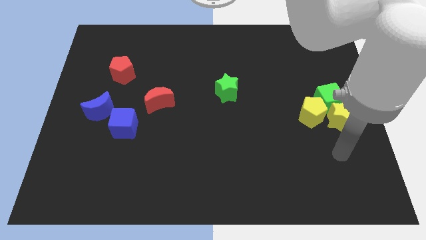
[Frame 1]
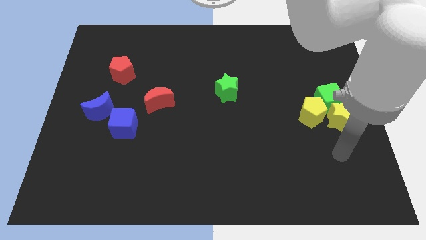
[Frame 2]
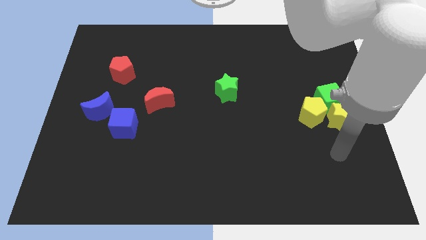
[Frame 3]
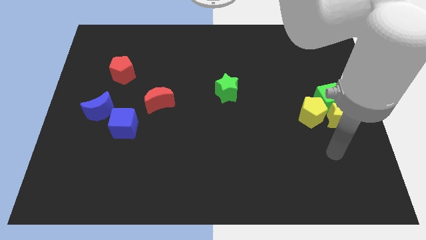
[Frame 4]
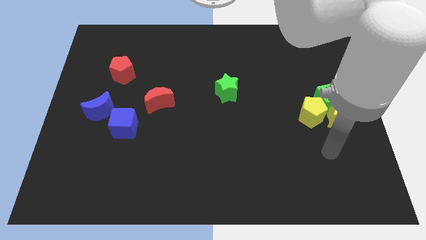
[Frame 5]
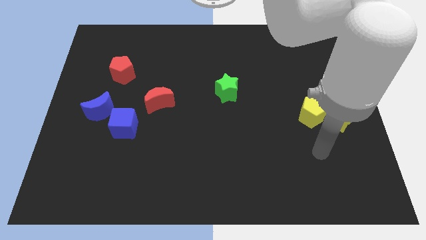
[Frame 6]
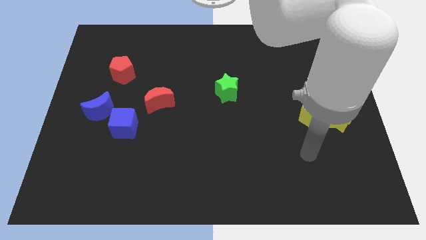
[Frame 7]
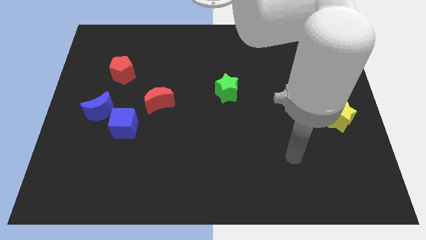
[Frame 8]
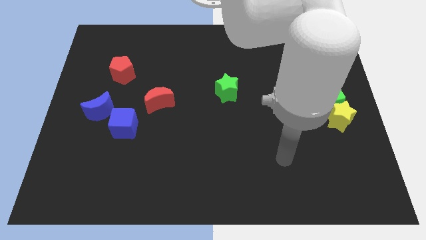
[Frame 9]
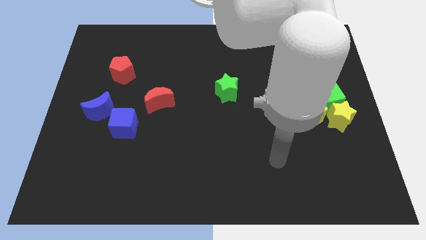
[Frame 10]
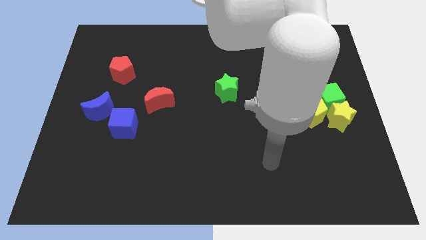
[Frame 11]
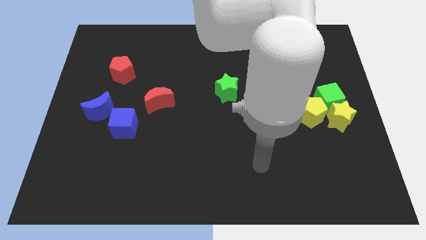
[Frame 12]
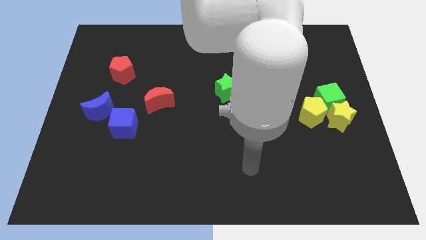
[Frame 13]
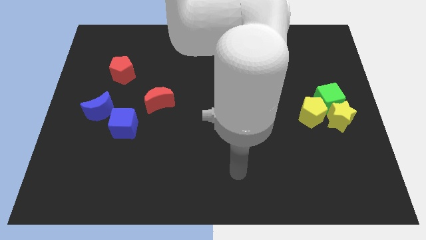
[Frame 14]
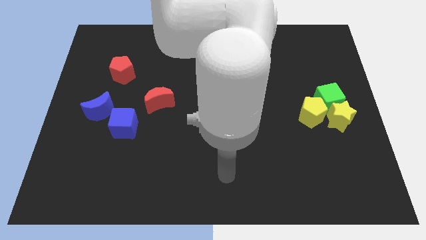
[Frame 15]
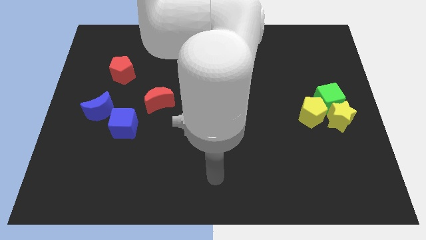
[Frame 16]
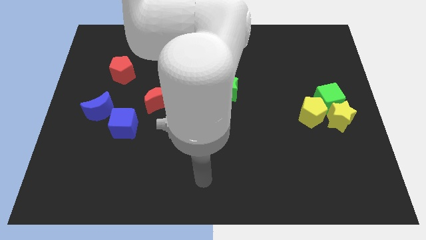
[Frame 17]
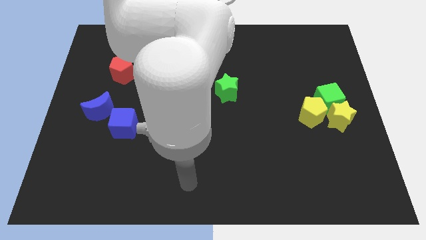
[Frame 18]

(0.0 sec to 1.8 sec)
move your arm towards the left side of the board

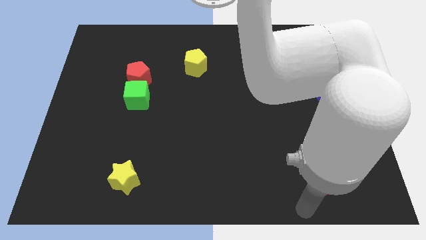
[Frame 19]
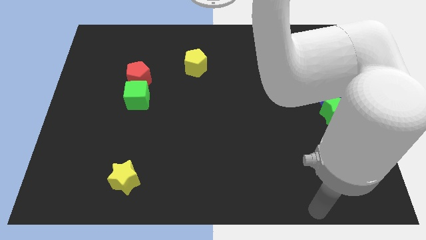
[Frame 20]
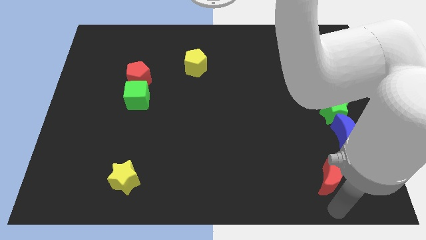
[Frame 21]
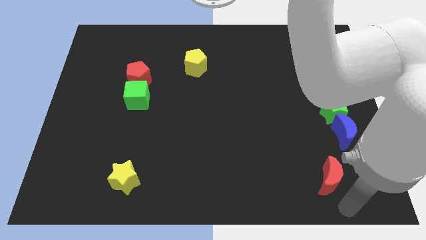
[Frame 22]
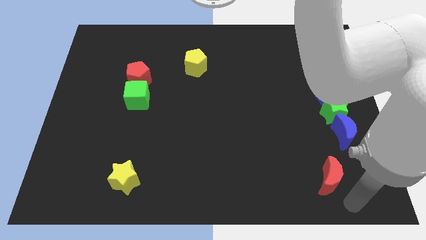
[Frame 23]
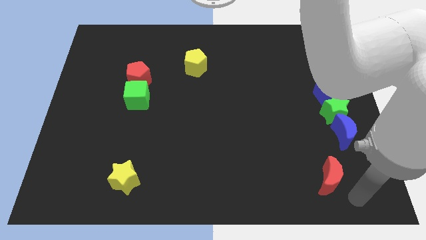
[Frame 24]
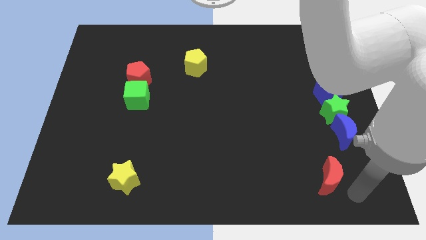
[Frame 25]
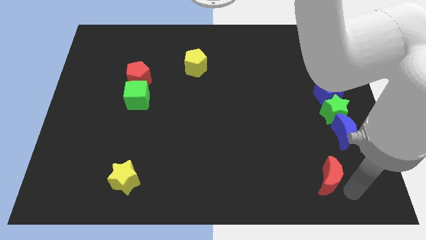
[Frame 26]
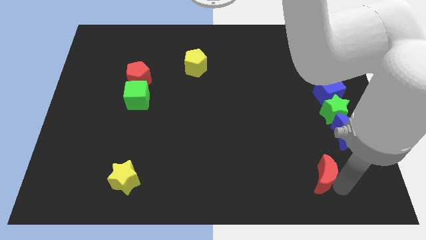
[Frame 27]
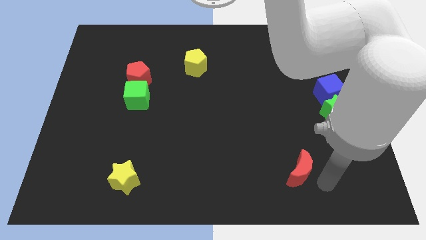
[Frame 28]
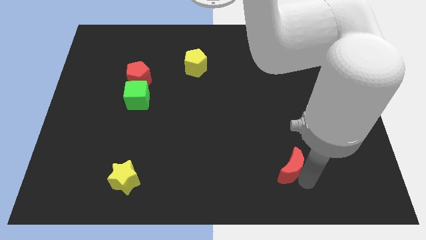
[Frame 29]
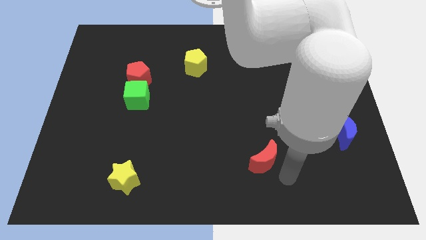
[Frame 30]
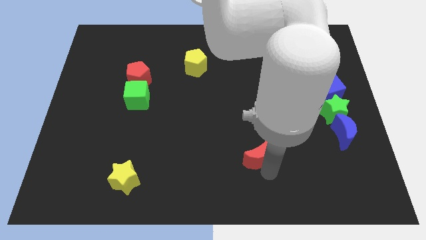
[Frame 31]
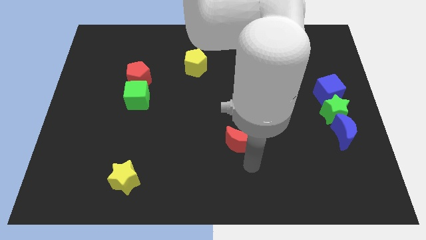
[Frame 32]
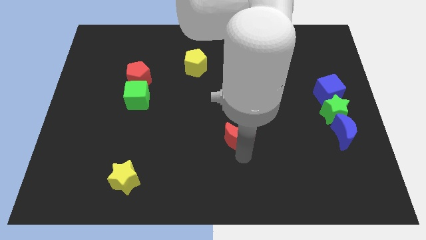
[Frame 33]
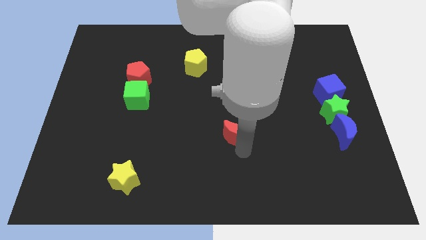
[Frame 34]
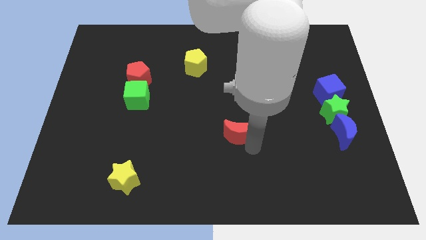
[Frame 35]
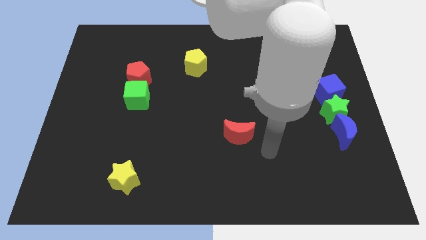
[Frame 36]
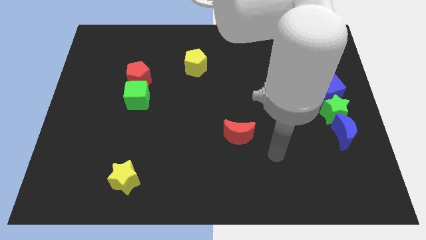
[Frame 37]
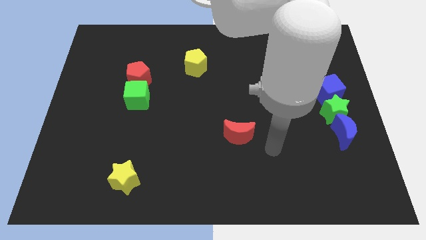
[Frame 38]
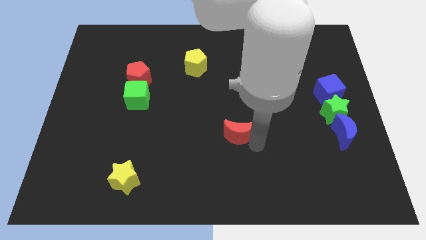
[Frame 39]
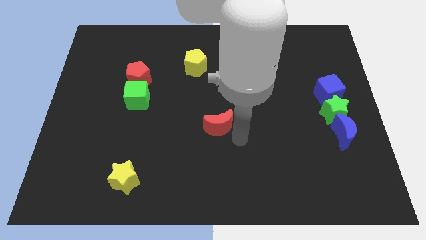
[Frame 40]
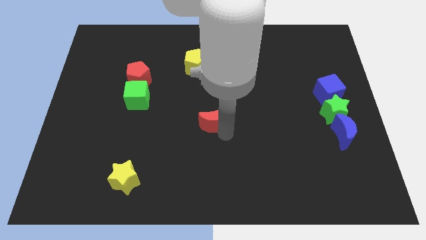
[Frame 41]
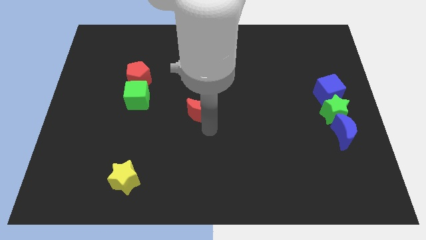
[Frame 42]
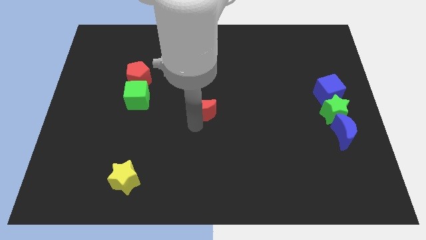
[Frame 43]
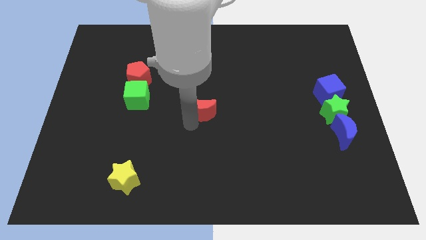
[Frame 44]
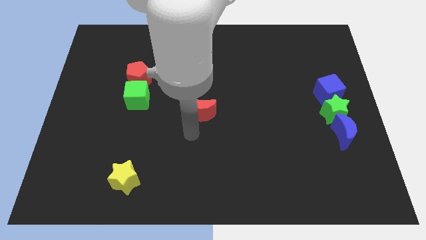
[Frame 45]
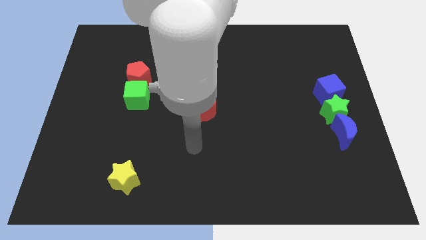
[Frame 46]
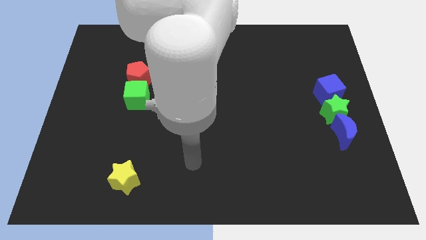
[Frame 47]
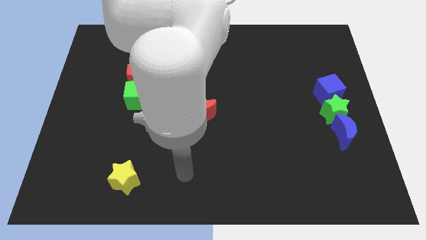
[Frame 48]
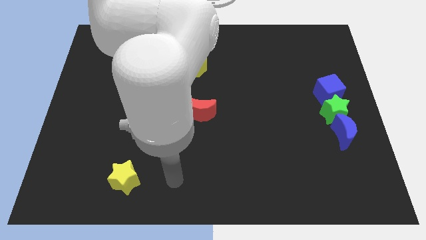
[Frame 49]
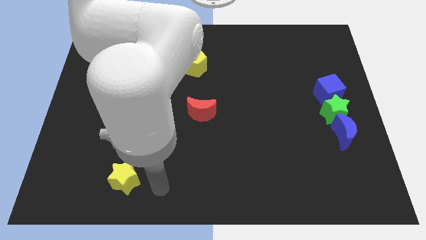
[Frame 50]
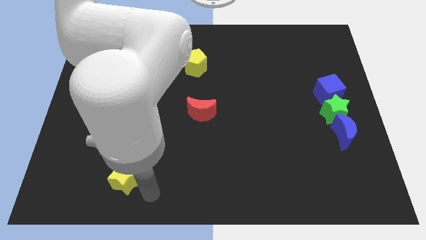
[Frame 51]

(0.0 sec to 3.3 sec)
push the red crescent to the center of the board

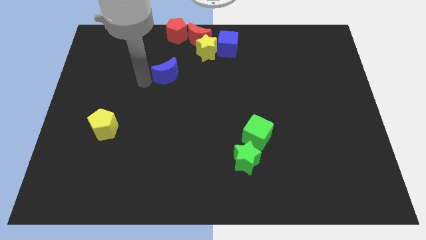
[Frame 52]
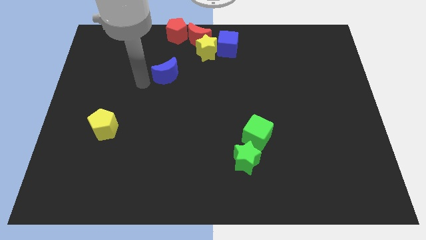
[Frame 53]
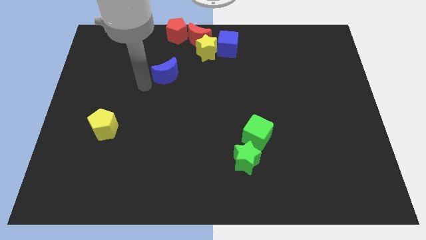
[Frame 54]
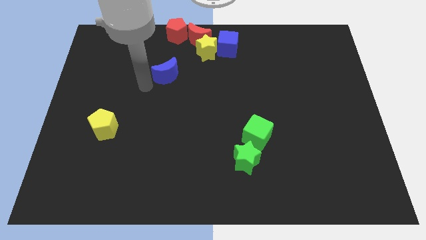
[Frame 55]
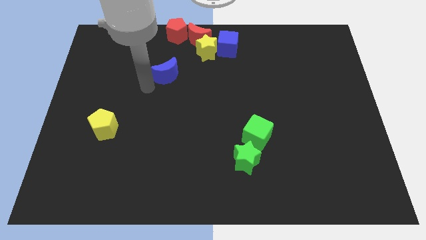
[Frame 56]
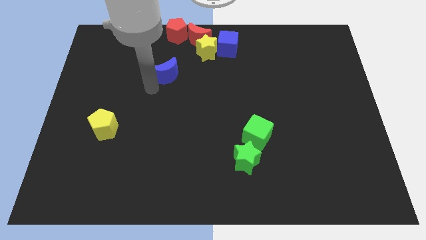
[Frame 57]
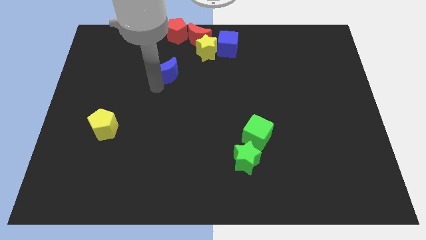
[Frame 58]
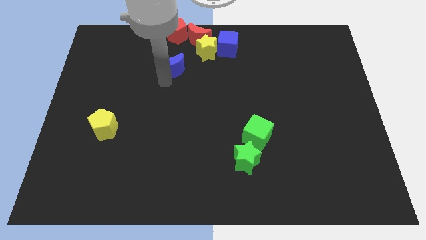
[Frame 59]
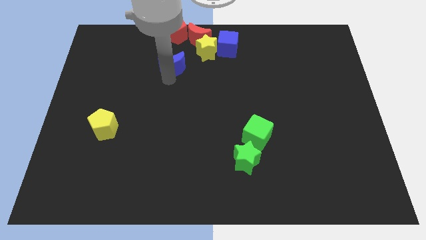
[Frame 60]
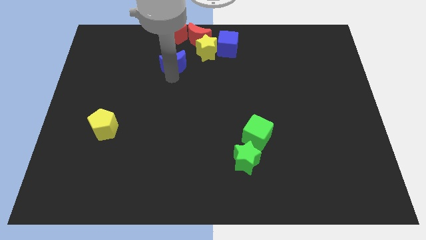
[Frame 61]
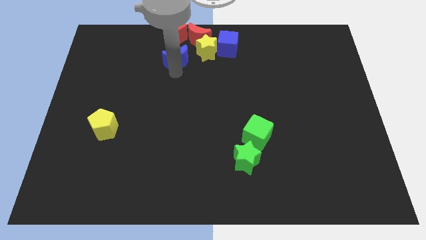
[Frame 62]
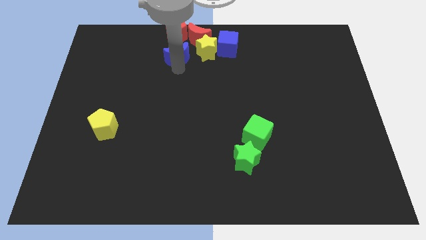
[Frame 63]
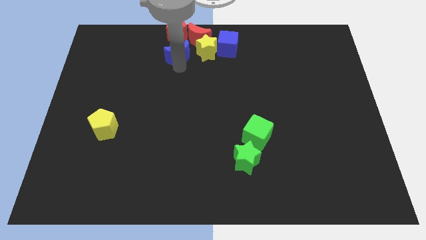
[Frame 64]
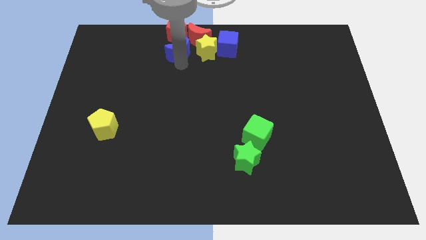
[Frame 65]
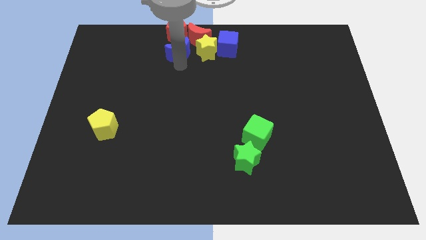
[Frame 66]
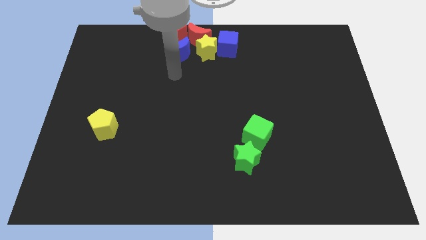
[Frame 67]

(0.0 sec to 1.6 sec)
push the blue crescent below the red pentagon

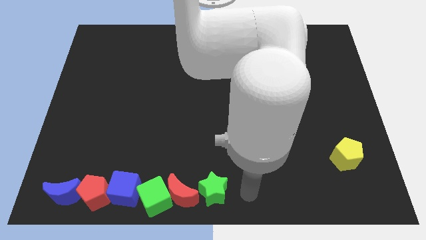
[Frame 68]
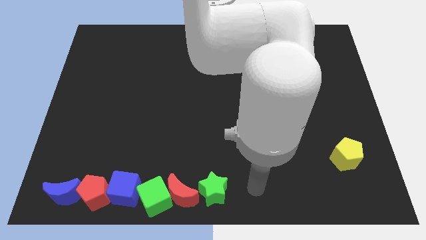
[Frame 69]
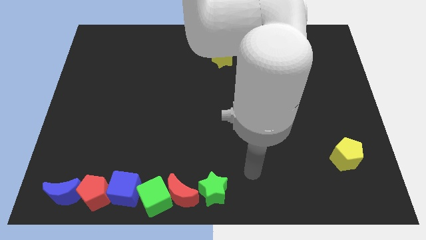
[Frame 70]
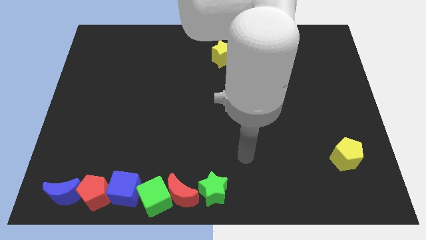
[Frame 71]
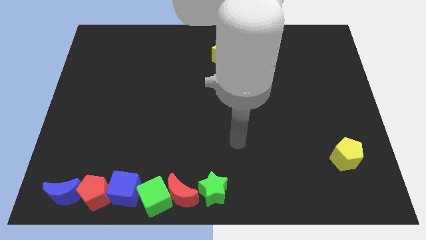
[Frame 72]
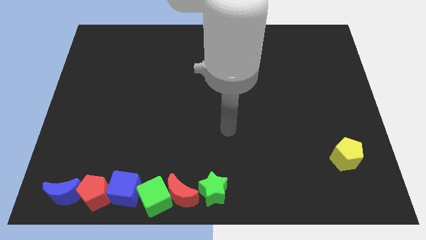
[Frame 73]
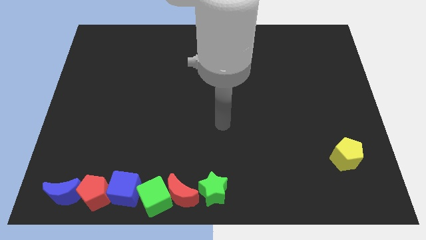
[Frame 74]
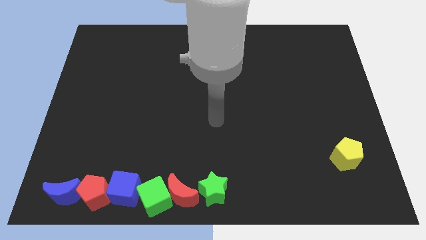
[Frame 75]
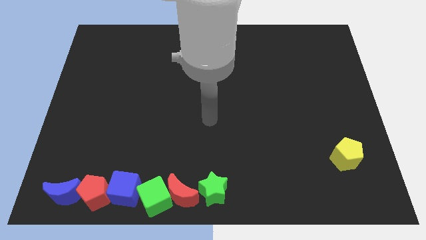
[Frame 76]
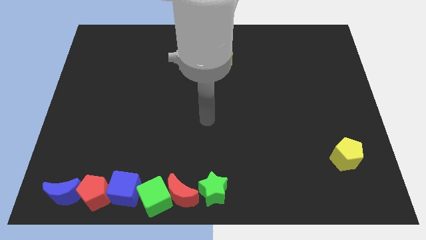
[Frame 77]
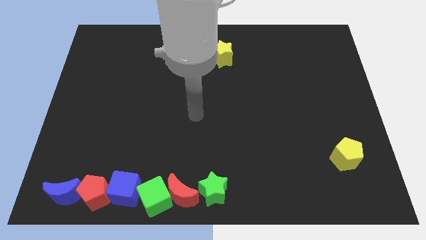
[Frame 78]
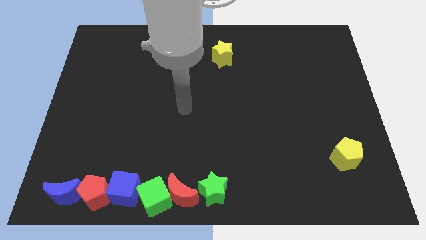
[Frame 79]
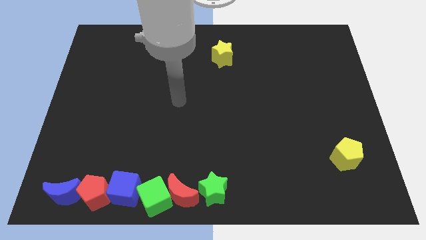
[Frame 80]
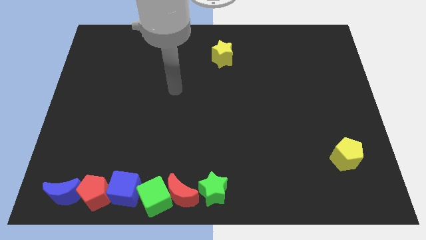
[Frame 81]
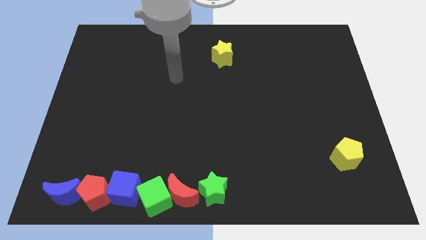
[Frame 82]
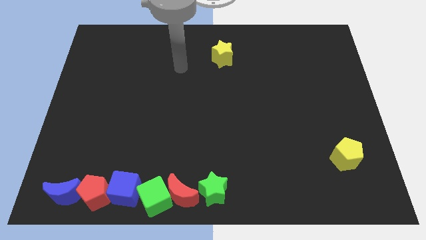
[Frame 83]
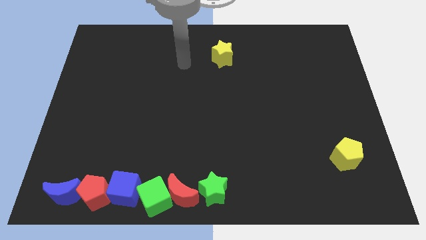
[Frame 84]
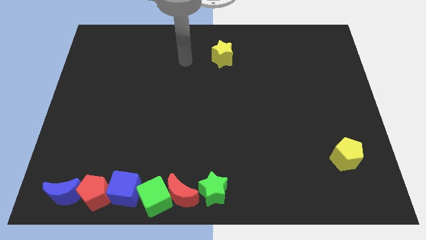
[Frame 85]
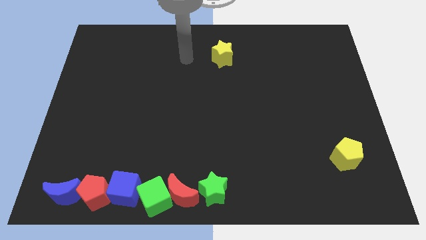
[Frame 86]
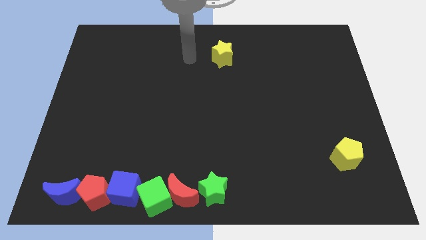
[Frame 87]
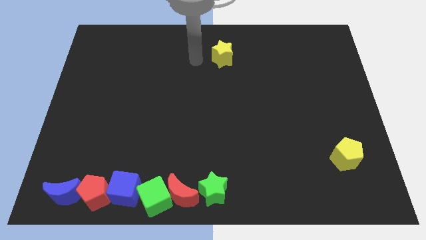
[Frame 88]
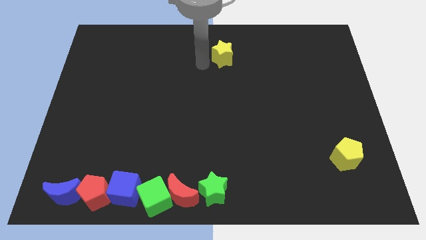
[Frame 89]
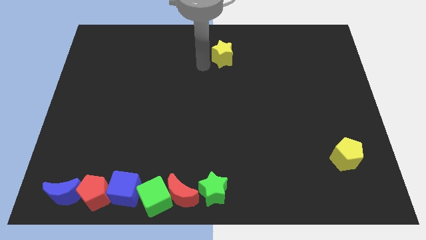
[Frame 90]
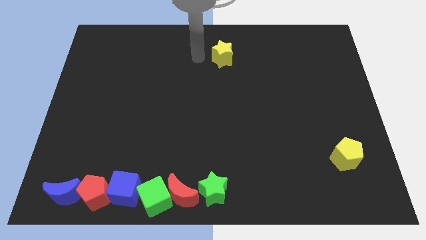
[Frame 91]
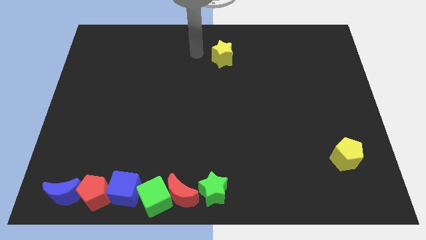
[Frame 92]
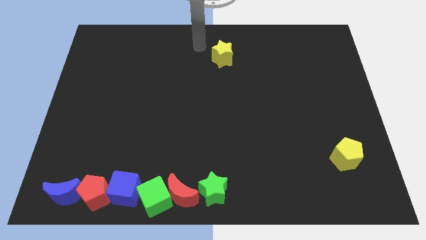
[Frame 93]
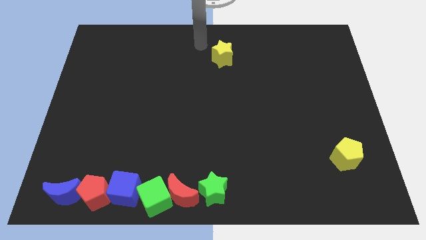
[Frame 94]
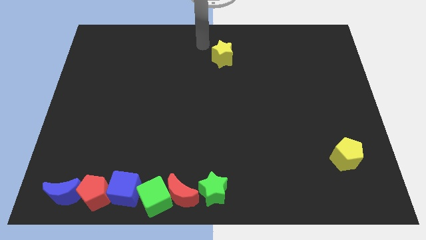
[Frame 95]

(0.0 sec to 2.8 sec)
move your arm and point towards the yellow star
